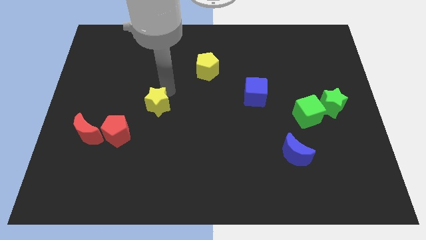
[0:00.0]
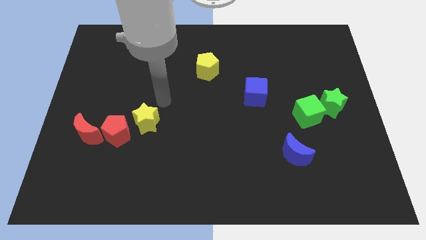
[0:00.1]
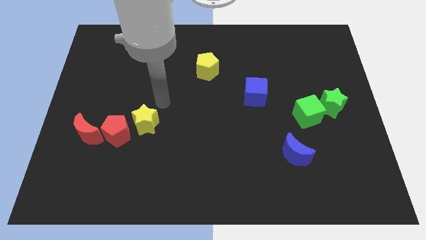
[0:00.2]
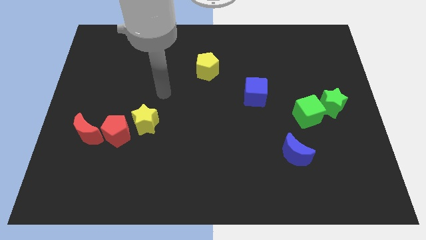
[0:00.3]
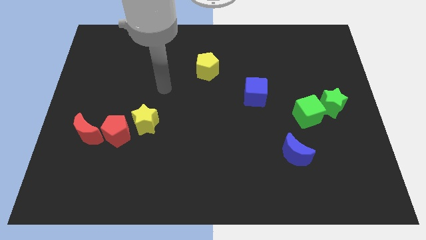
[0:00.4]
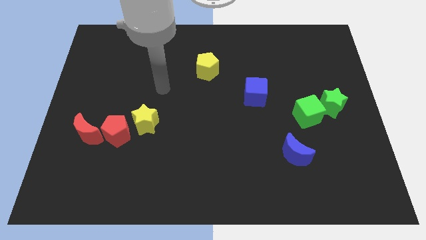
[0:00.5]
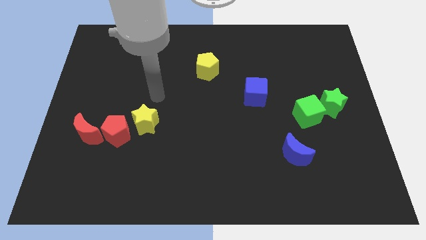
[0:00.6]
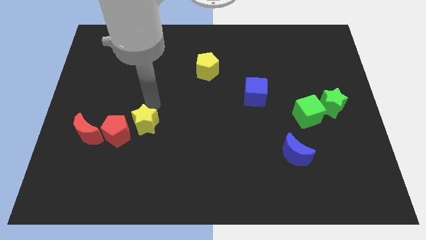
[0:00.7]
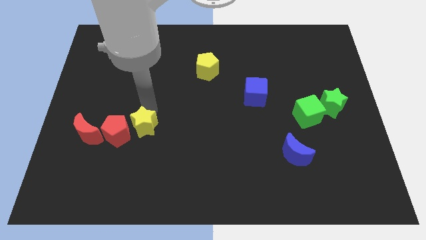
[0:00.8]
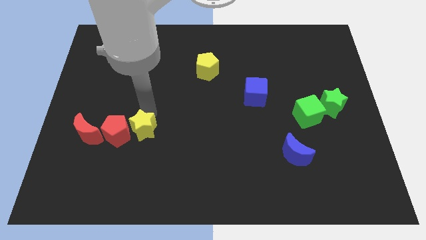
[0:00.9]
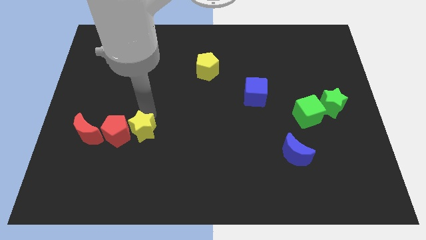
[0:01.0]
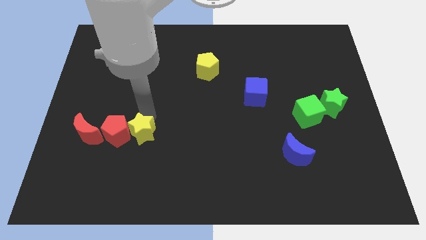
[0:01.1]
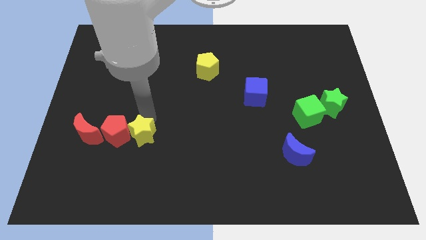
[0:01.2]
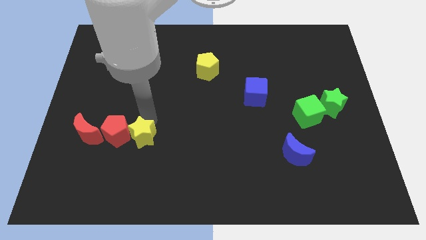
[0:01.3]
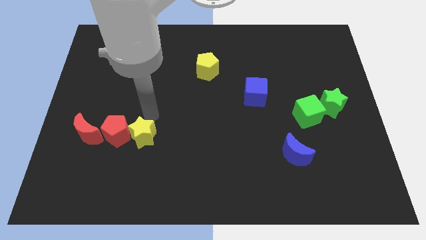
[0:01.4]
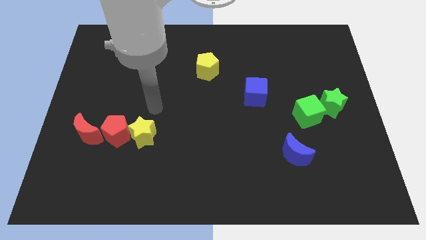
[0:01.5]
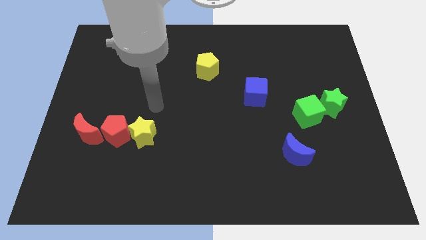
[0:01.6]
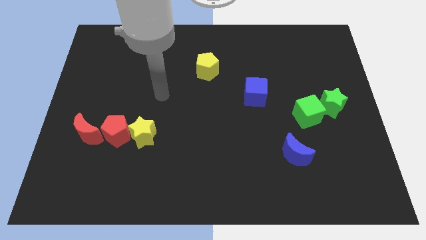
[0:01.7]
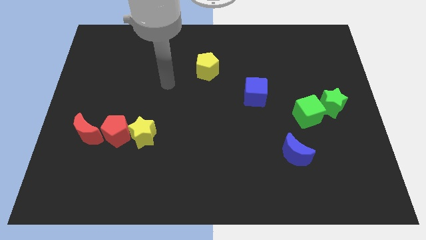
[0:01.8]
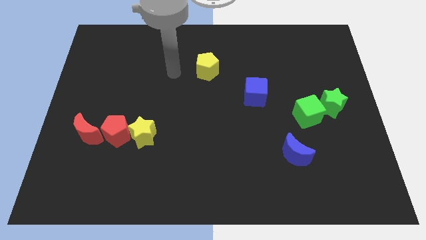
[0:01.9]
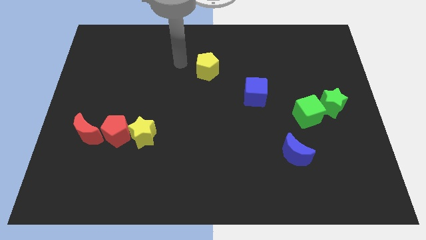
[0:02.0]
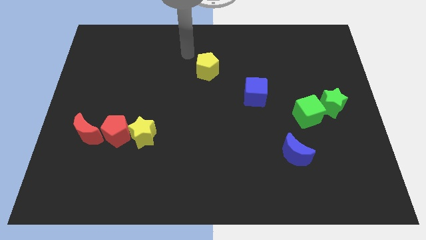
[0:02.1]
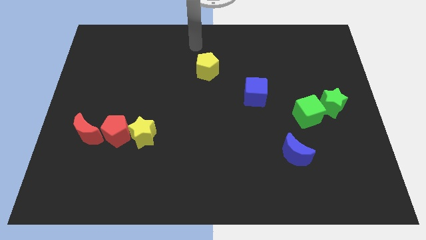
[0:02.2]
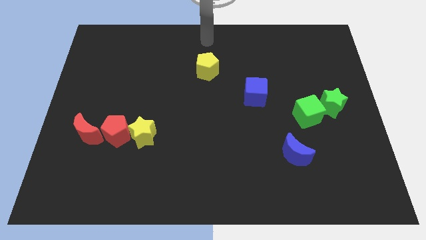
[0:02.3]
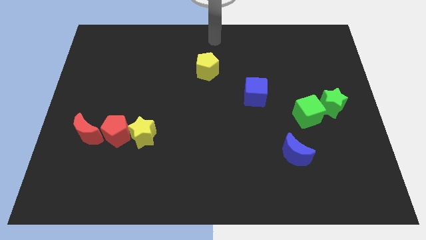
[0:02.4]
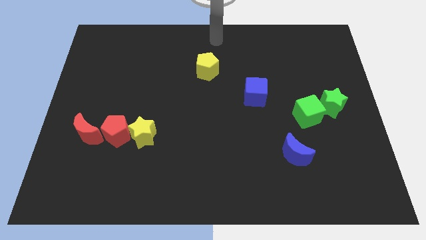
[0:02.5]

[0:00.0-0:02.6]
move yellow star near to the red pentagon

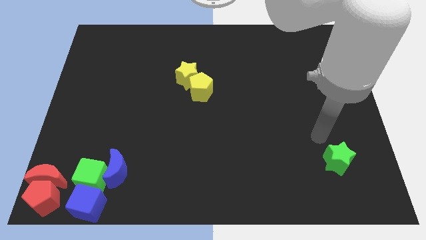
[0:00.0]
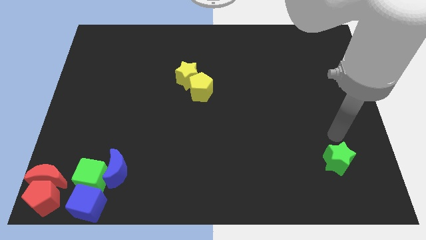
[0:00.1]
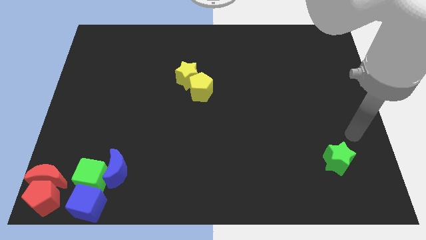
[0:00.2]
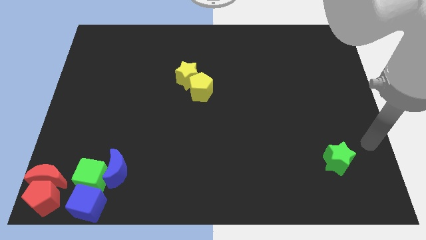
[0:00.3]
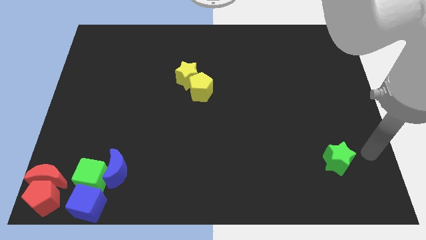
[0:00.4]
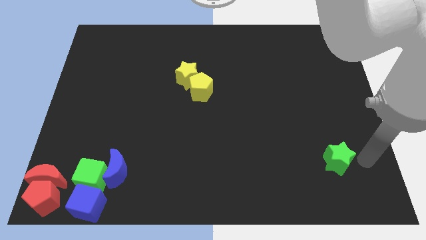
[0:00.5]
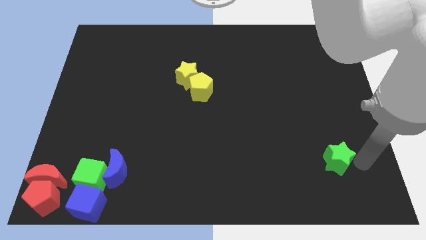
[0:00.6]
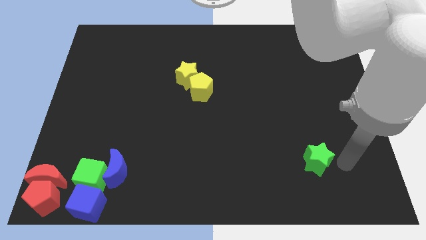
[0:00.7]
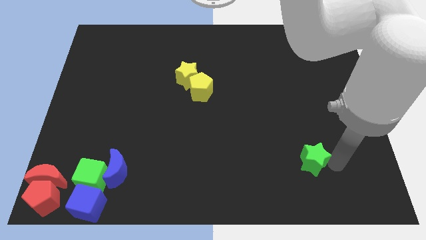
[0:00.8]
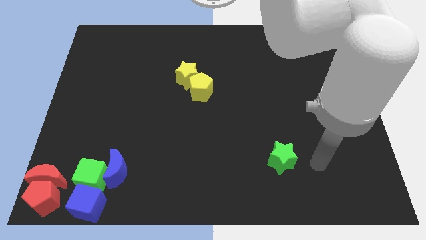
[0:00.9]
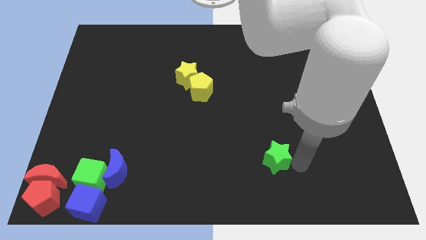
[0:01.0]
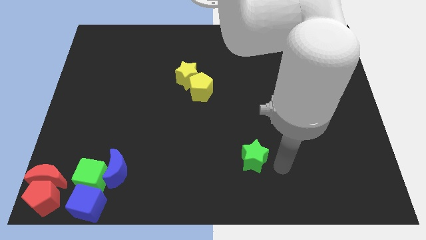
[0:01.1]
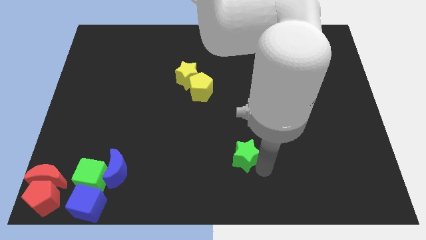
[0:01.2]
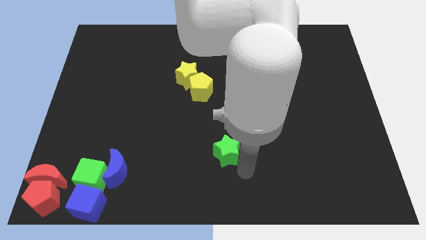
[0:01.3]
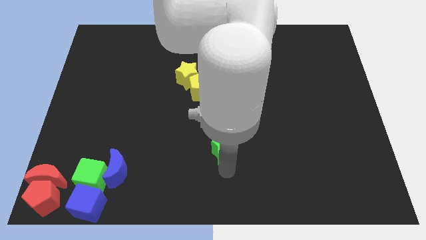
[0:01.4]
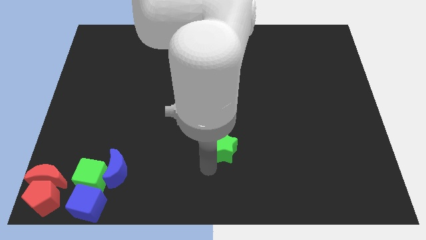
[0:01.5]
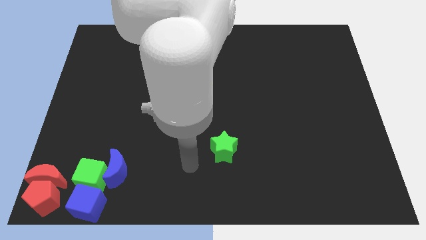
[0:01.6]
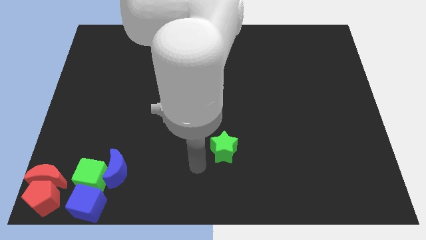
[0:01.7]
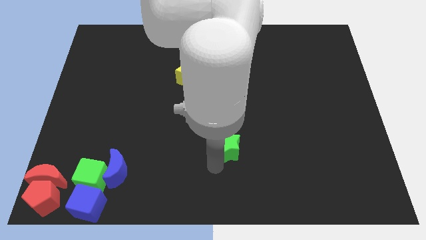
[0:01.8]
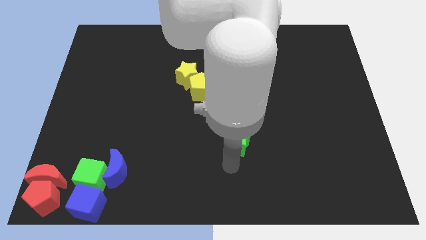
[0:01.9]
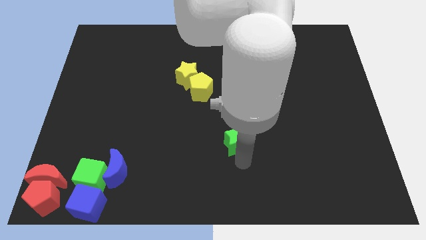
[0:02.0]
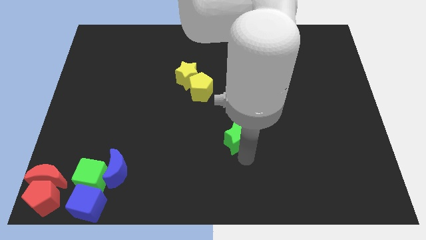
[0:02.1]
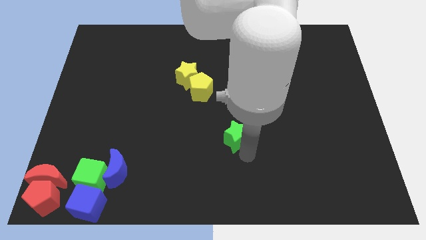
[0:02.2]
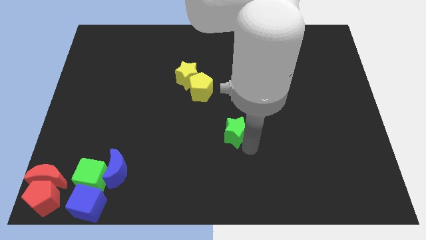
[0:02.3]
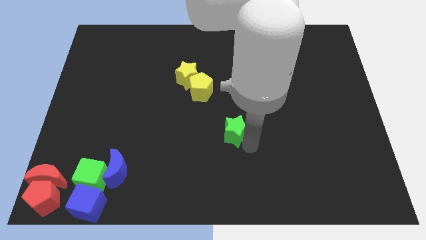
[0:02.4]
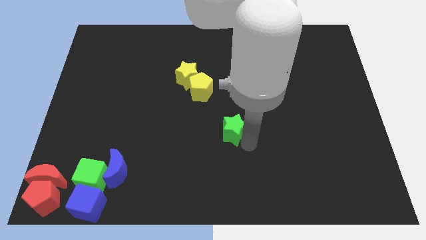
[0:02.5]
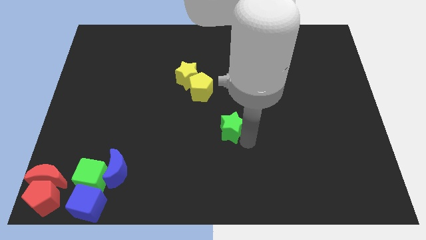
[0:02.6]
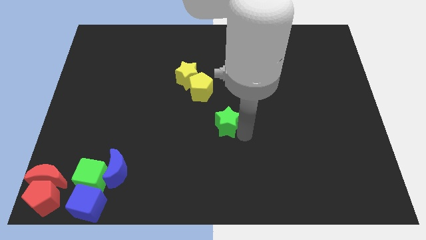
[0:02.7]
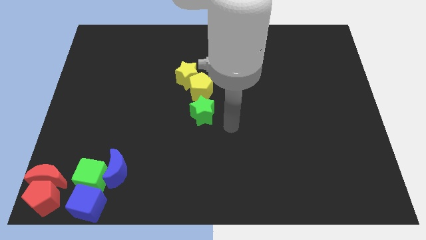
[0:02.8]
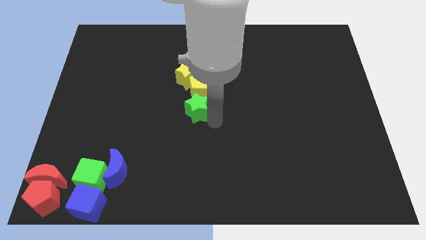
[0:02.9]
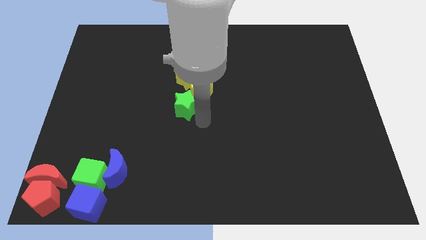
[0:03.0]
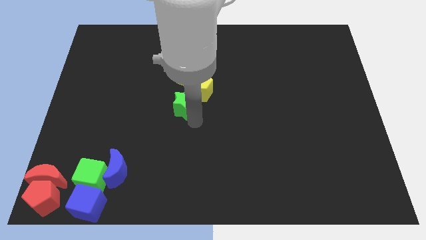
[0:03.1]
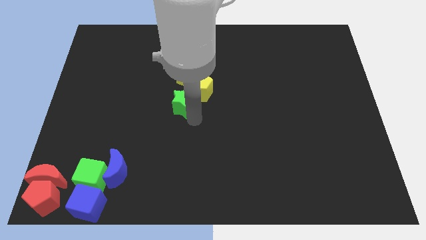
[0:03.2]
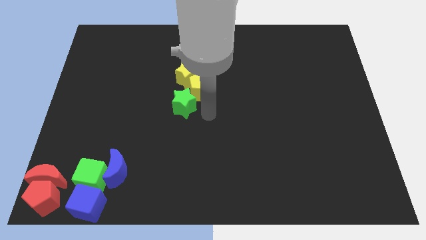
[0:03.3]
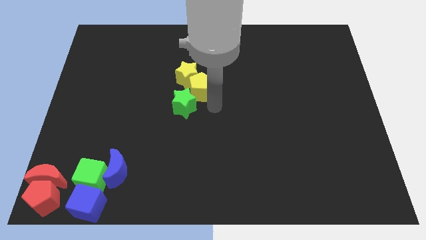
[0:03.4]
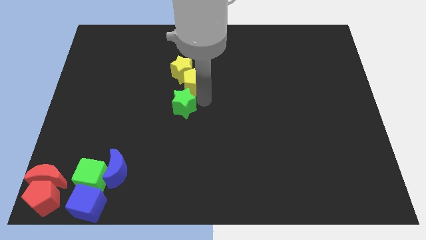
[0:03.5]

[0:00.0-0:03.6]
adjust the green star at the bottom left of the yellow pentagon

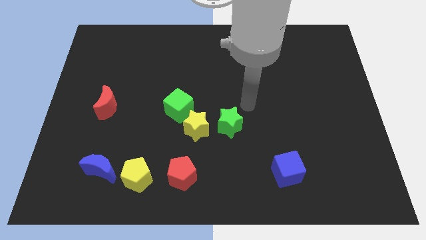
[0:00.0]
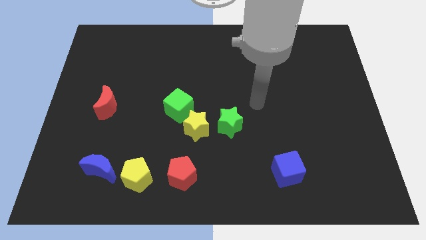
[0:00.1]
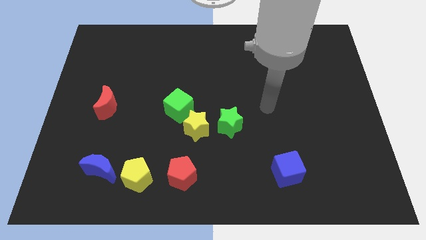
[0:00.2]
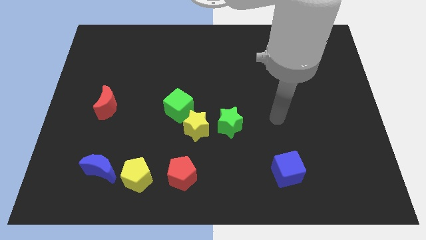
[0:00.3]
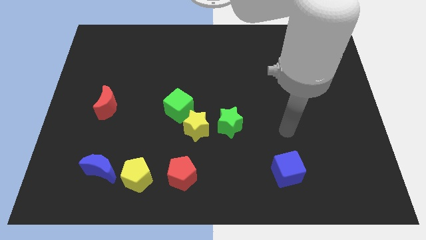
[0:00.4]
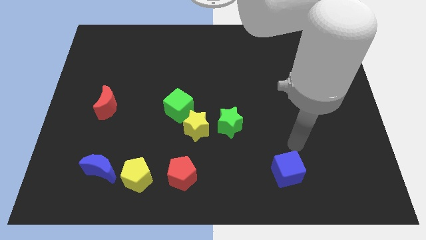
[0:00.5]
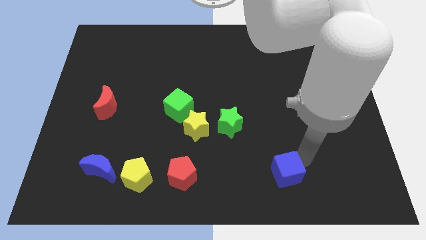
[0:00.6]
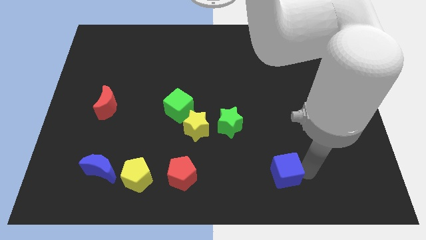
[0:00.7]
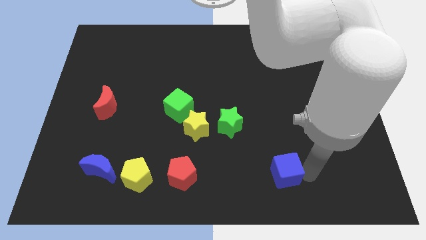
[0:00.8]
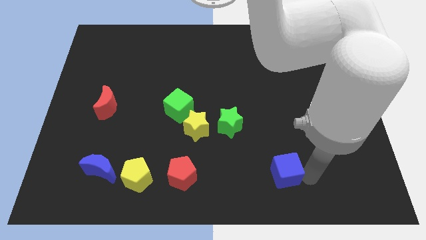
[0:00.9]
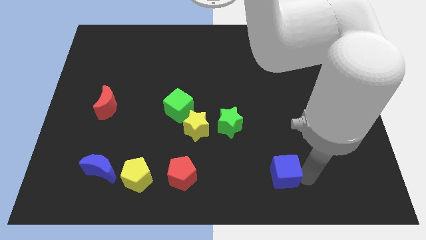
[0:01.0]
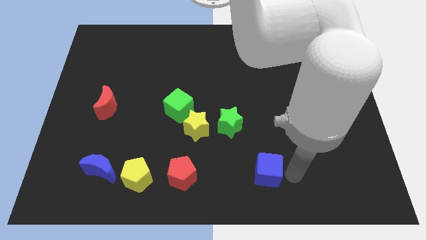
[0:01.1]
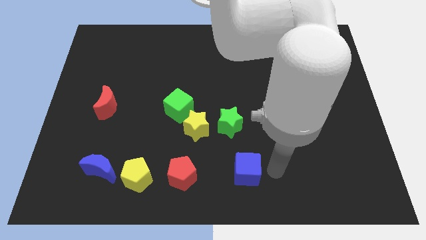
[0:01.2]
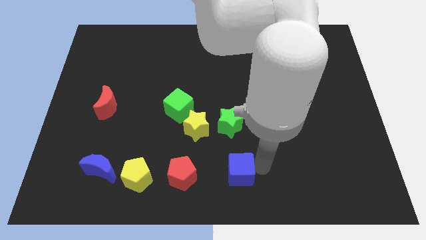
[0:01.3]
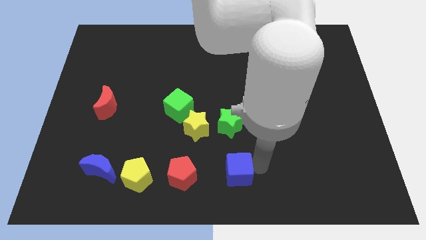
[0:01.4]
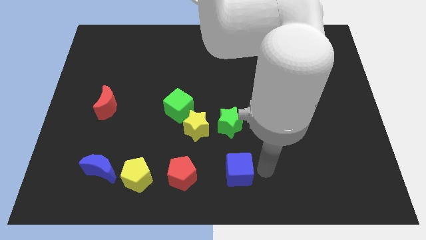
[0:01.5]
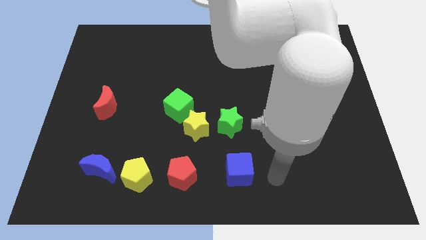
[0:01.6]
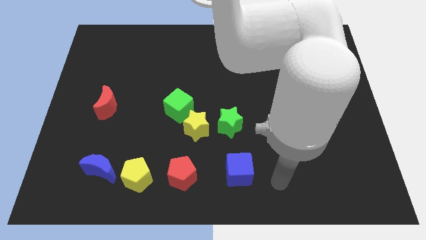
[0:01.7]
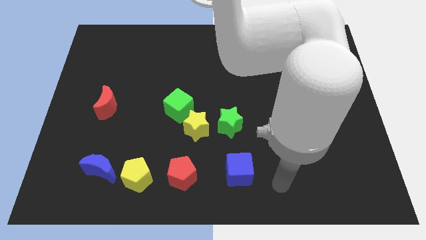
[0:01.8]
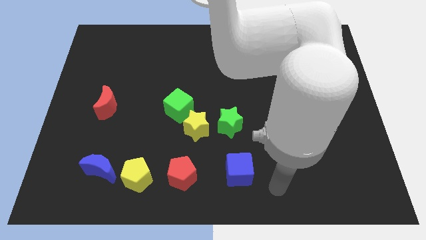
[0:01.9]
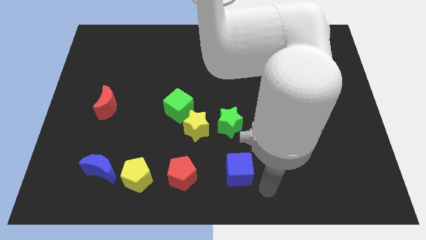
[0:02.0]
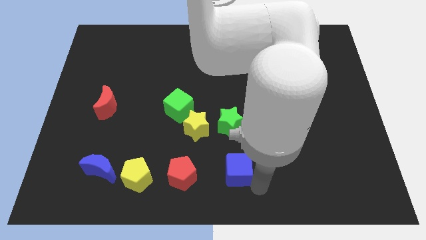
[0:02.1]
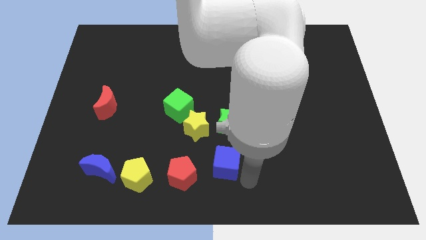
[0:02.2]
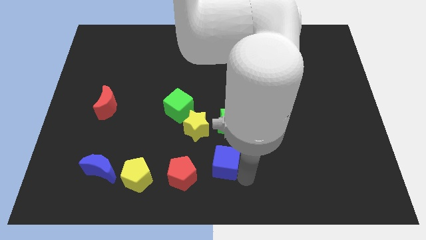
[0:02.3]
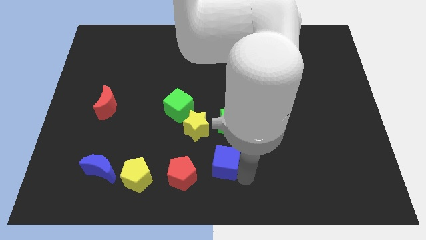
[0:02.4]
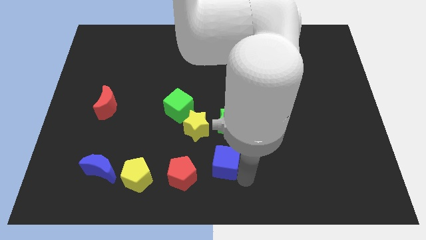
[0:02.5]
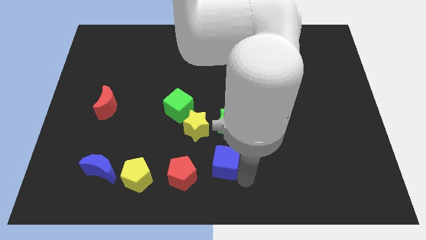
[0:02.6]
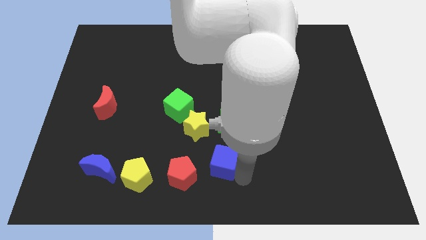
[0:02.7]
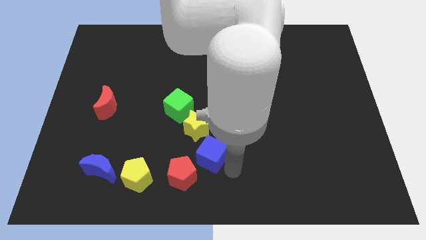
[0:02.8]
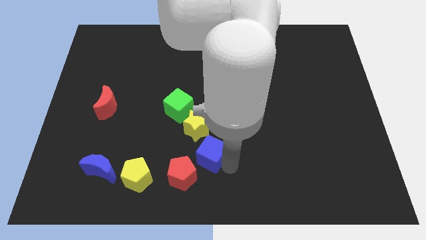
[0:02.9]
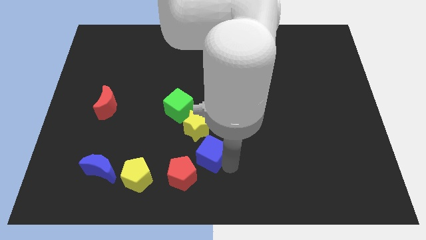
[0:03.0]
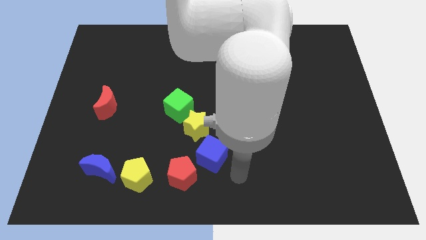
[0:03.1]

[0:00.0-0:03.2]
drag blue cube near yellow star
